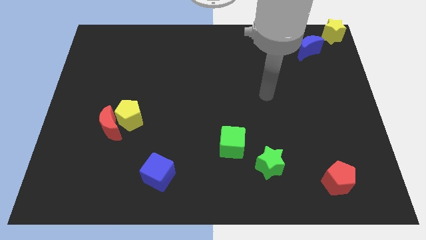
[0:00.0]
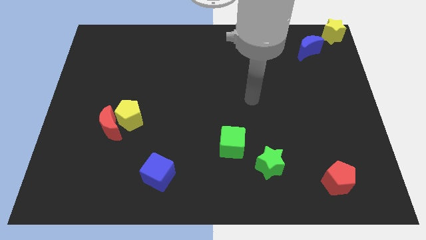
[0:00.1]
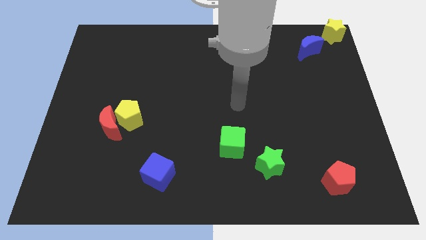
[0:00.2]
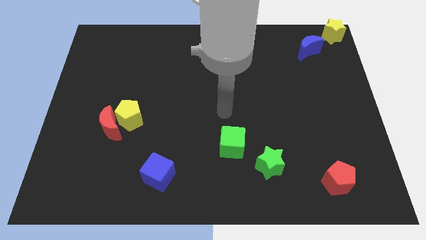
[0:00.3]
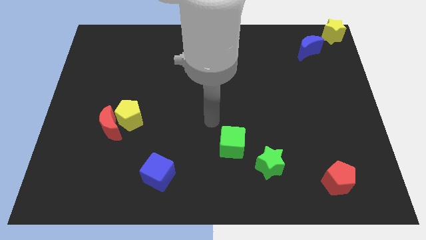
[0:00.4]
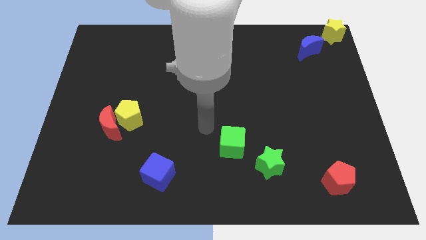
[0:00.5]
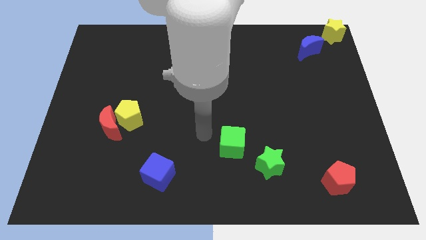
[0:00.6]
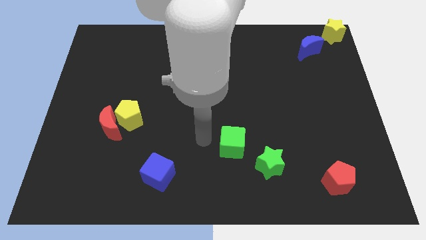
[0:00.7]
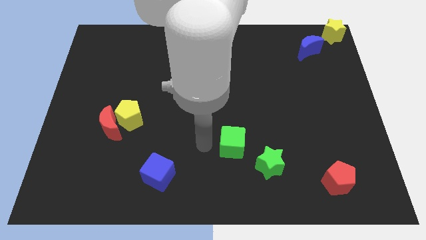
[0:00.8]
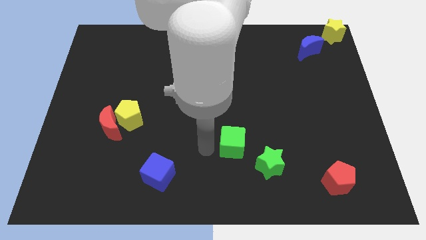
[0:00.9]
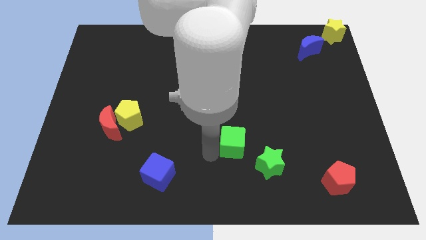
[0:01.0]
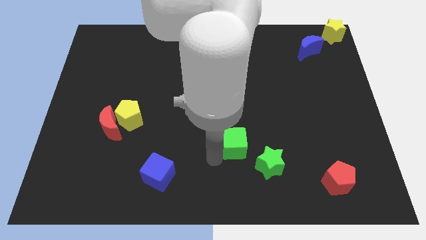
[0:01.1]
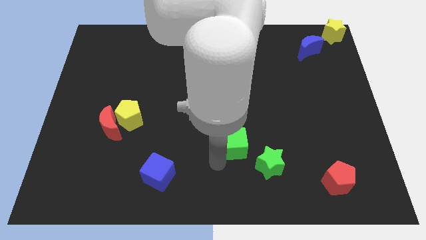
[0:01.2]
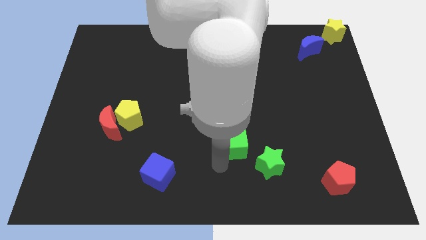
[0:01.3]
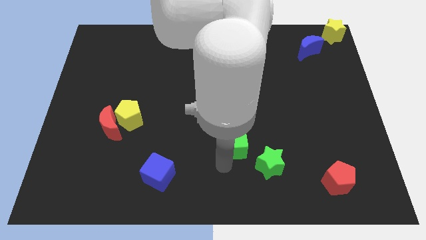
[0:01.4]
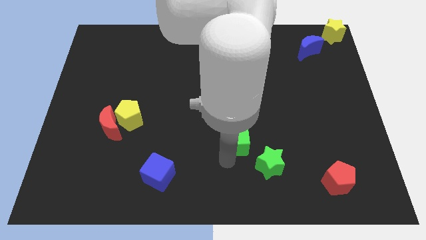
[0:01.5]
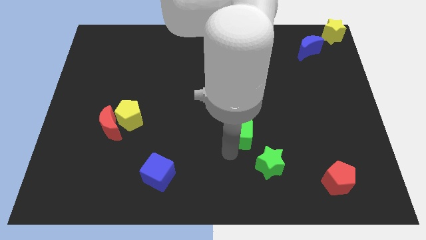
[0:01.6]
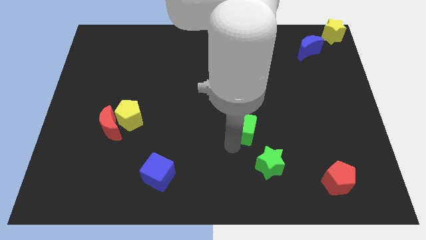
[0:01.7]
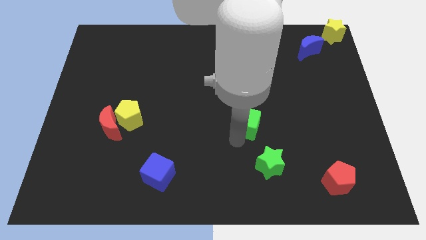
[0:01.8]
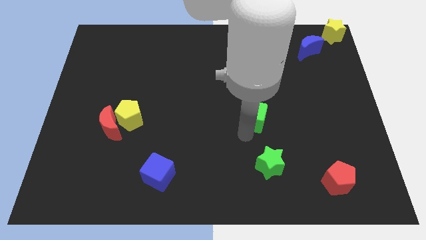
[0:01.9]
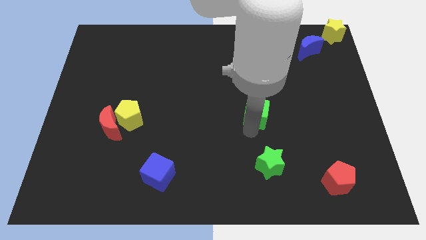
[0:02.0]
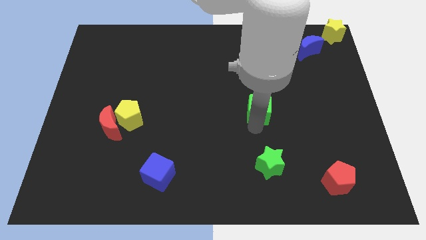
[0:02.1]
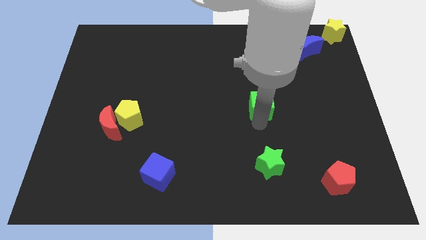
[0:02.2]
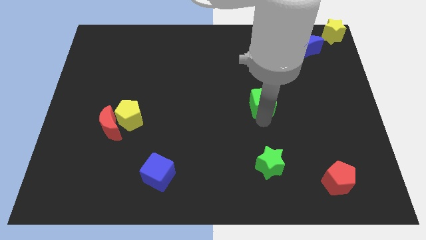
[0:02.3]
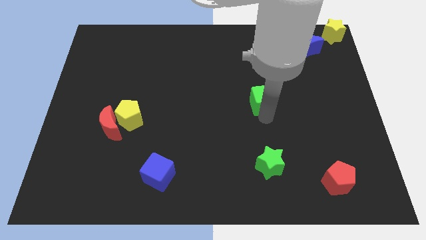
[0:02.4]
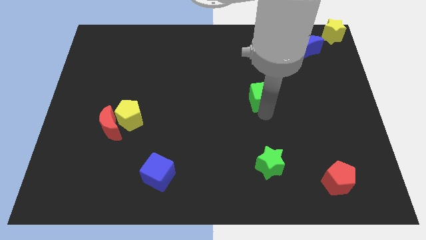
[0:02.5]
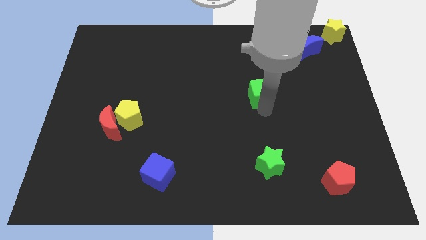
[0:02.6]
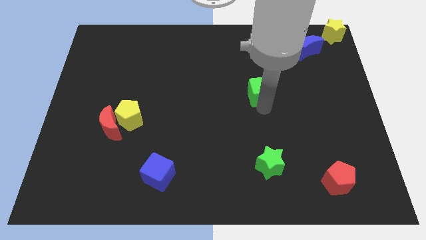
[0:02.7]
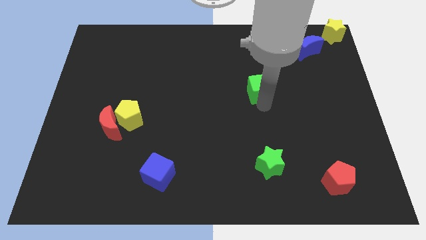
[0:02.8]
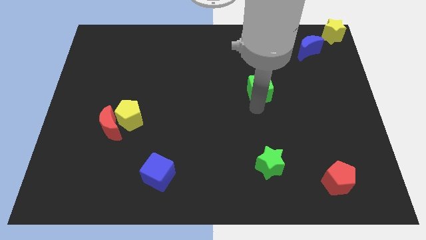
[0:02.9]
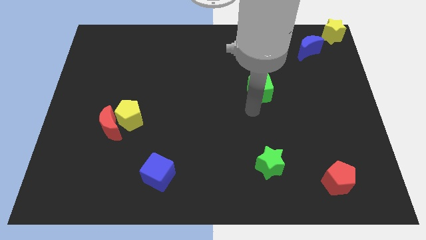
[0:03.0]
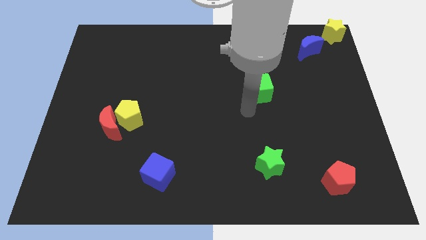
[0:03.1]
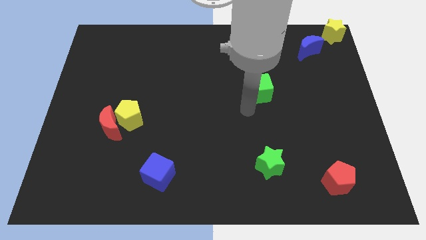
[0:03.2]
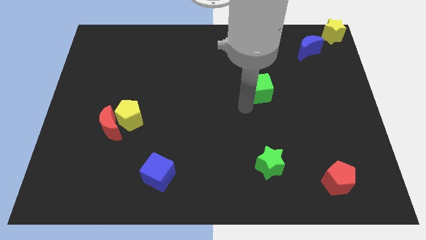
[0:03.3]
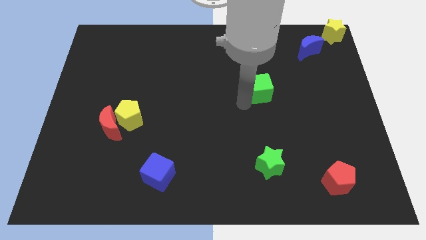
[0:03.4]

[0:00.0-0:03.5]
place green cube vertical to green star

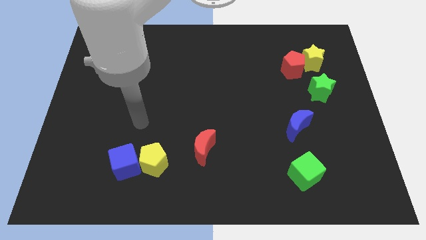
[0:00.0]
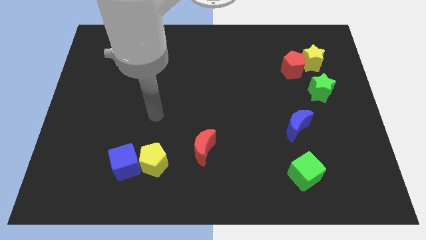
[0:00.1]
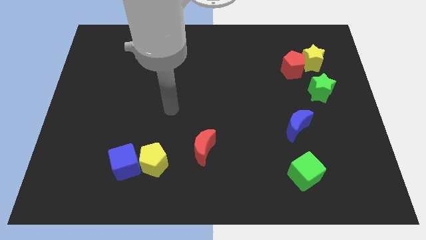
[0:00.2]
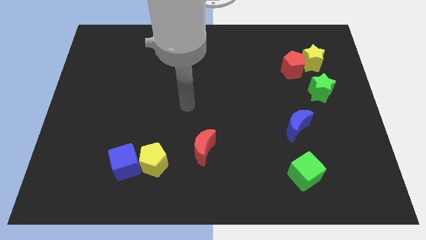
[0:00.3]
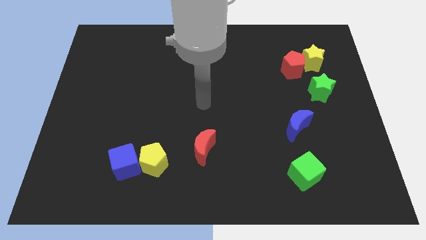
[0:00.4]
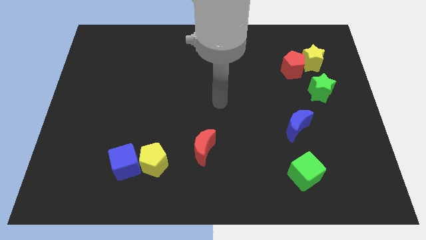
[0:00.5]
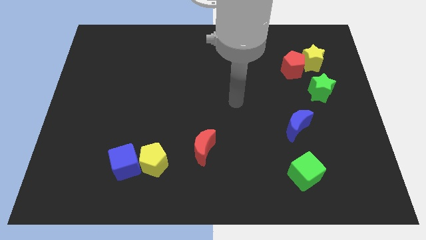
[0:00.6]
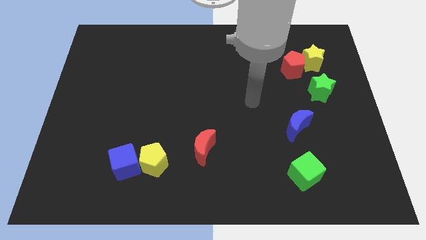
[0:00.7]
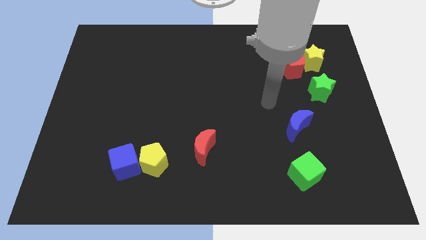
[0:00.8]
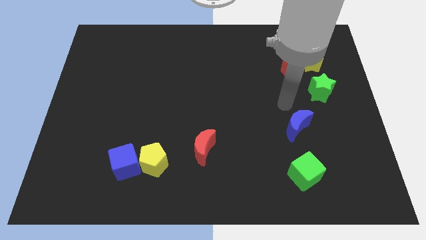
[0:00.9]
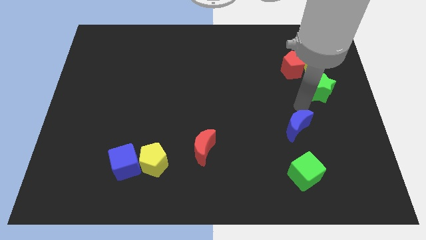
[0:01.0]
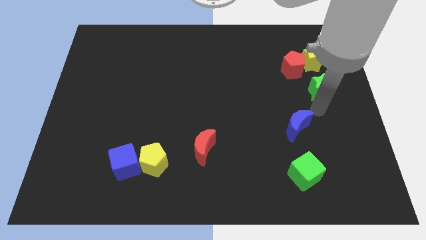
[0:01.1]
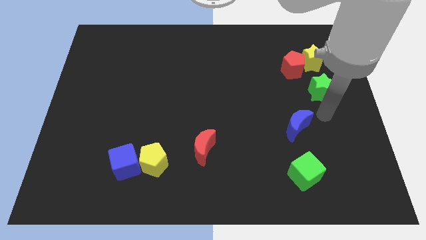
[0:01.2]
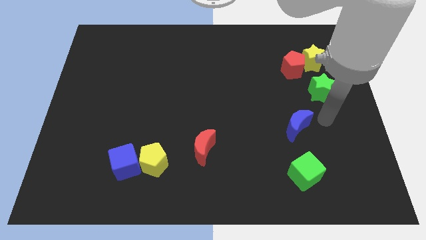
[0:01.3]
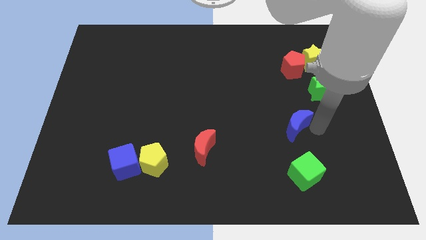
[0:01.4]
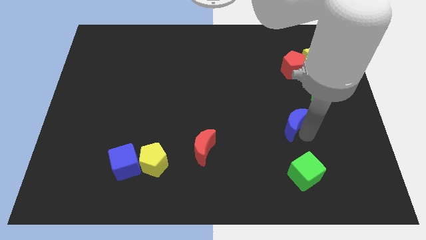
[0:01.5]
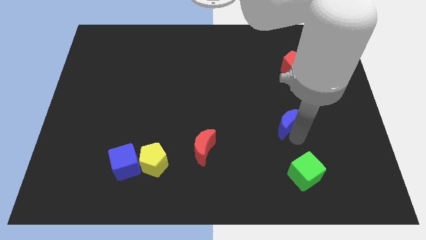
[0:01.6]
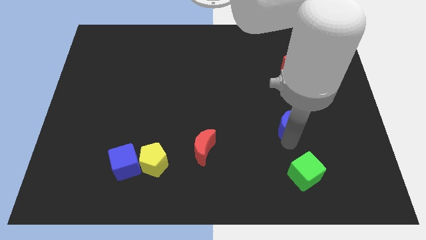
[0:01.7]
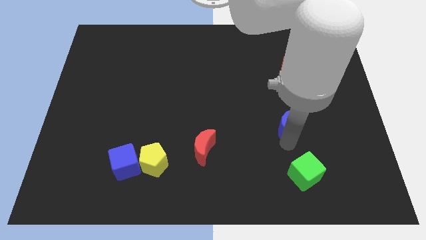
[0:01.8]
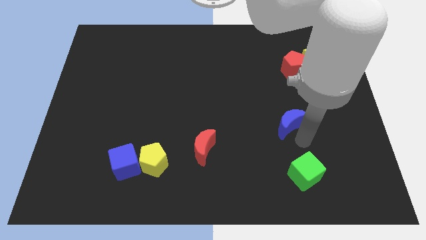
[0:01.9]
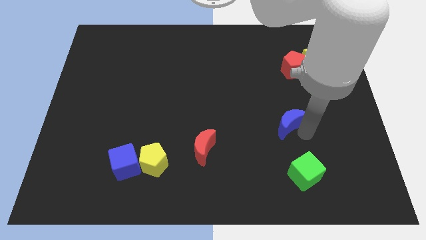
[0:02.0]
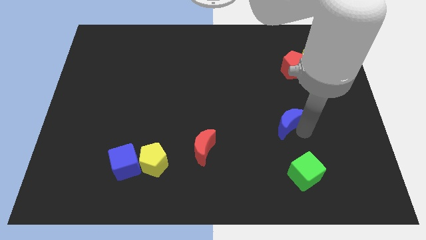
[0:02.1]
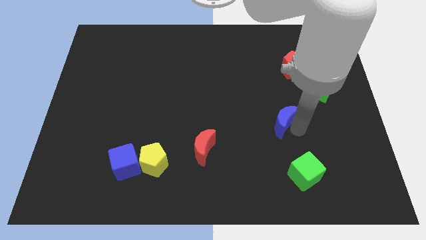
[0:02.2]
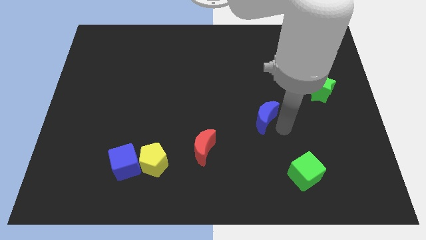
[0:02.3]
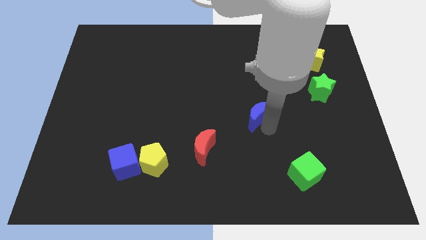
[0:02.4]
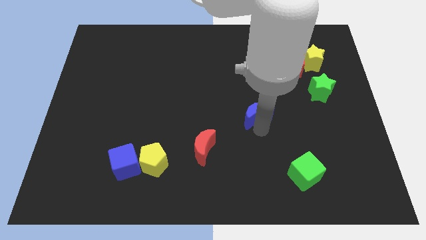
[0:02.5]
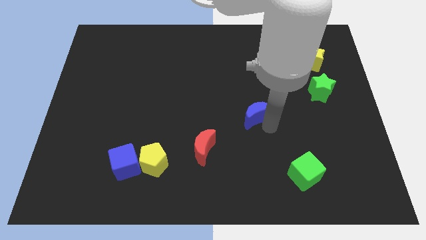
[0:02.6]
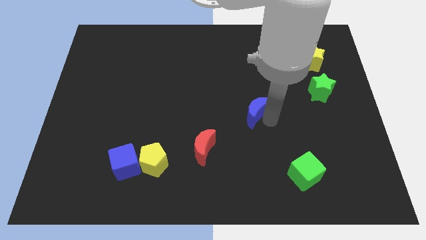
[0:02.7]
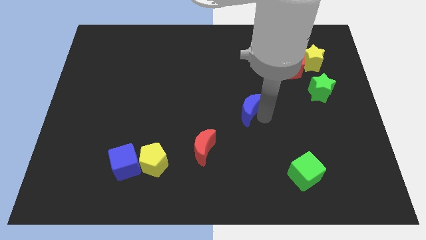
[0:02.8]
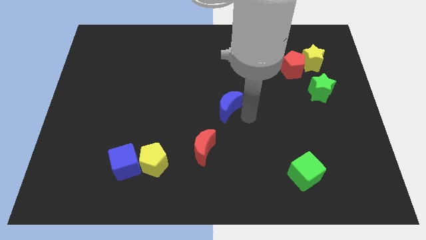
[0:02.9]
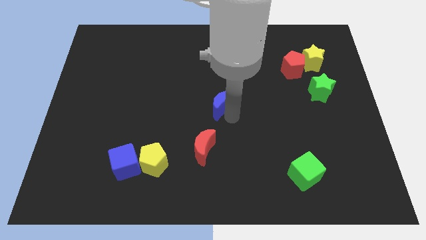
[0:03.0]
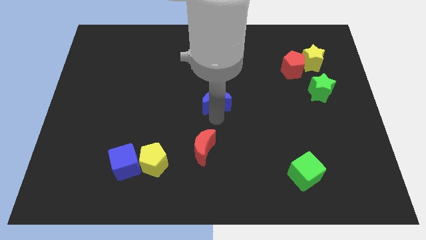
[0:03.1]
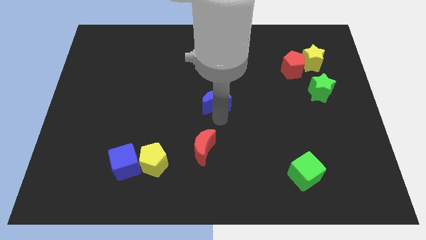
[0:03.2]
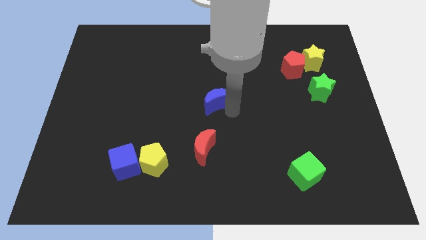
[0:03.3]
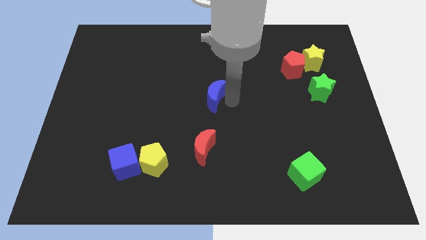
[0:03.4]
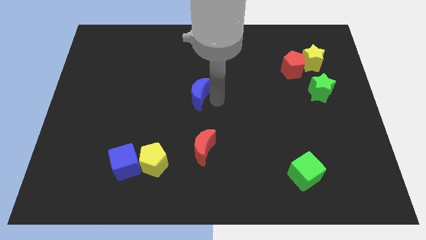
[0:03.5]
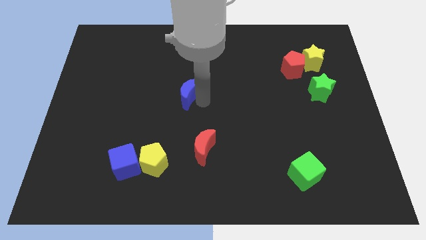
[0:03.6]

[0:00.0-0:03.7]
move the blue crescent at the top side of the red crescent

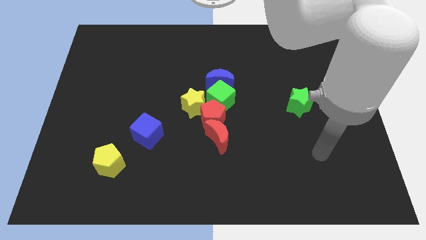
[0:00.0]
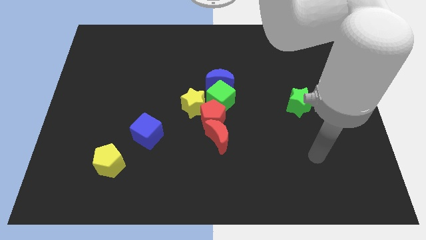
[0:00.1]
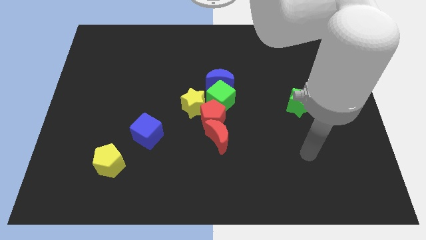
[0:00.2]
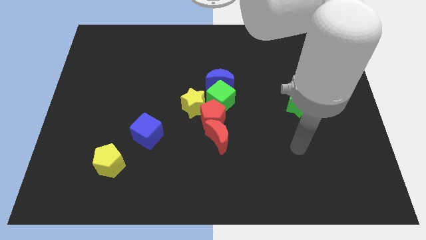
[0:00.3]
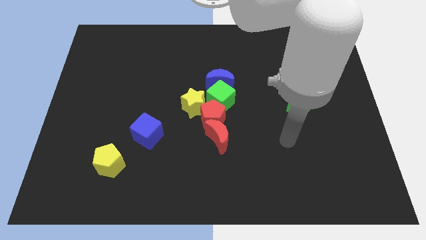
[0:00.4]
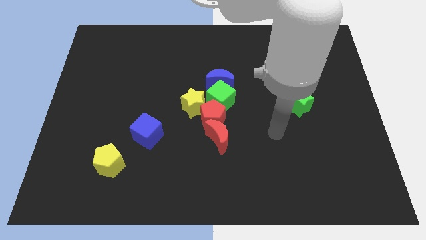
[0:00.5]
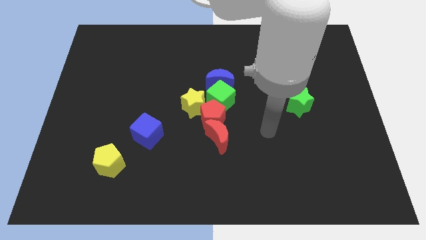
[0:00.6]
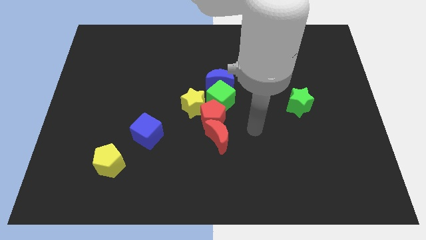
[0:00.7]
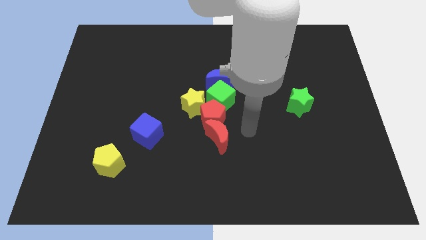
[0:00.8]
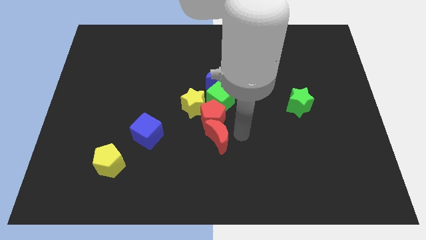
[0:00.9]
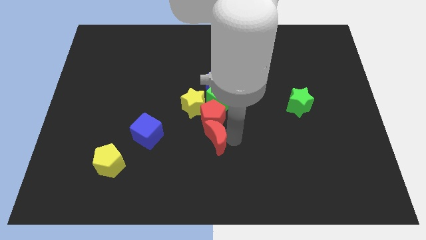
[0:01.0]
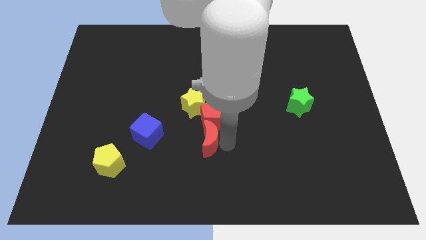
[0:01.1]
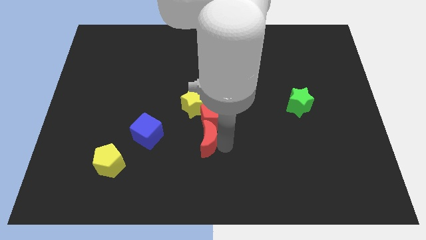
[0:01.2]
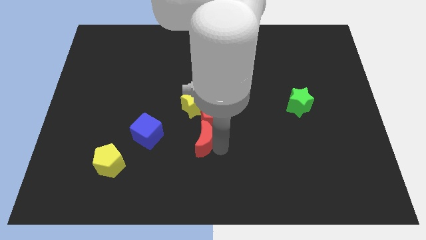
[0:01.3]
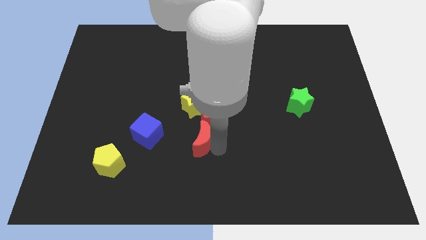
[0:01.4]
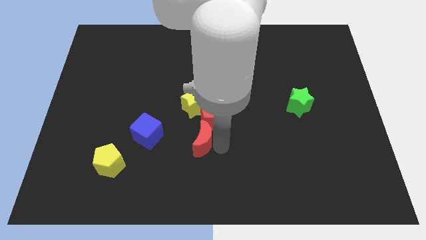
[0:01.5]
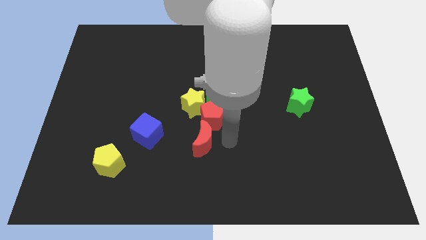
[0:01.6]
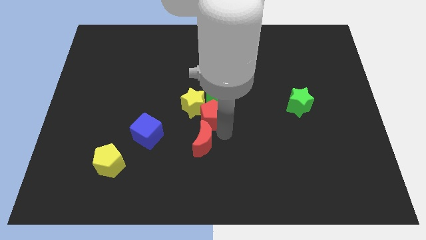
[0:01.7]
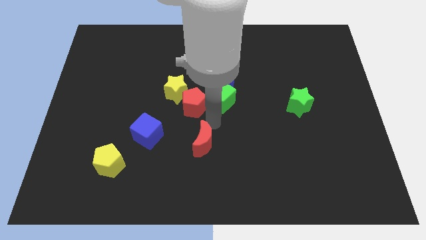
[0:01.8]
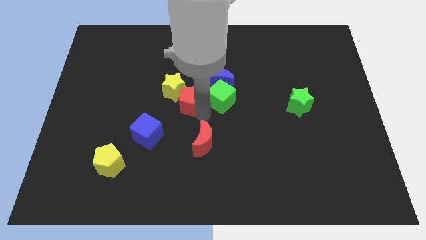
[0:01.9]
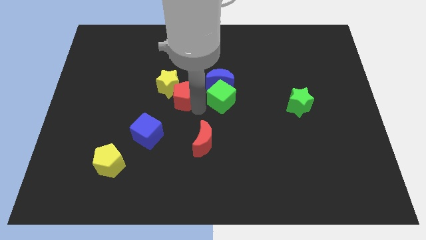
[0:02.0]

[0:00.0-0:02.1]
separate the red pentagon and red moon
